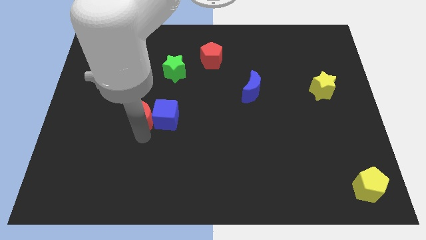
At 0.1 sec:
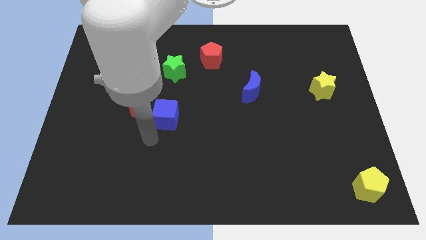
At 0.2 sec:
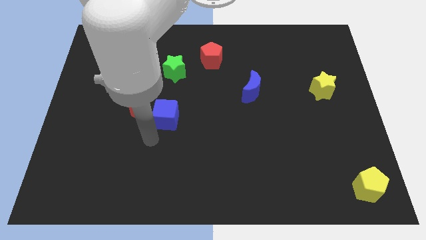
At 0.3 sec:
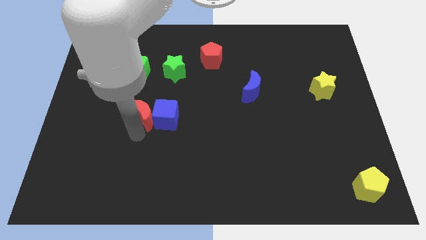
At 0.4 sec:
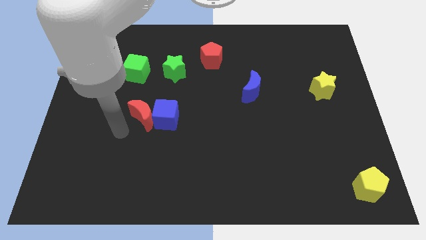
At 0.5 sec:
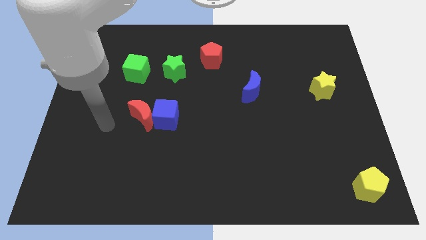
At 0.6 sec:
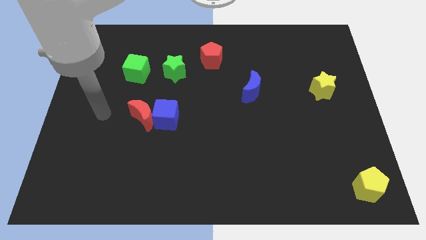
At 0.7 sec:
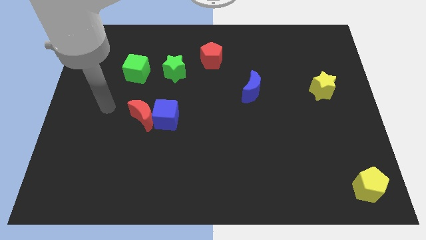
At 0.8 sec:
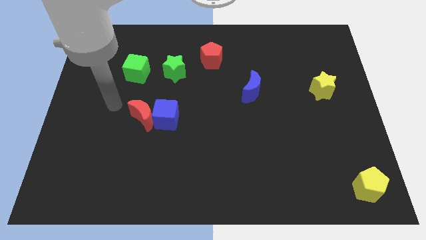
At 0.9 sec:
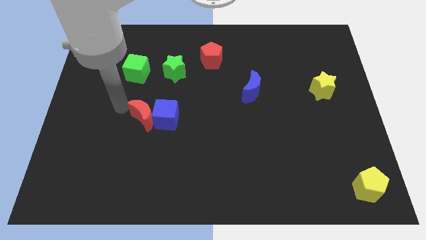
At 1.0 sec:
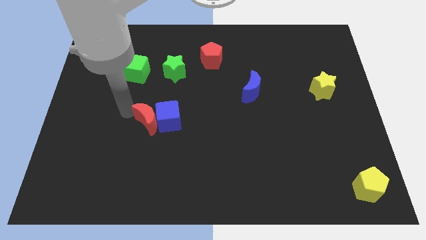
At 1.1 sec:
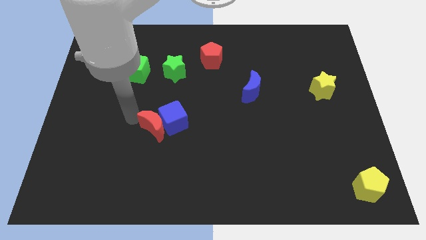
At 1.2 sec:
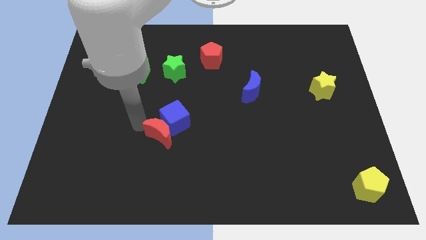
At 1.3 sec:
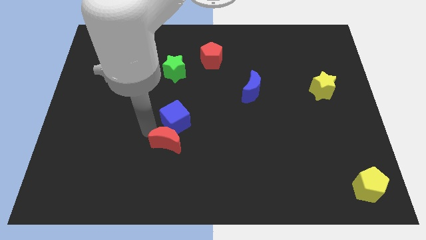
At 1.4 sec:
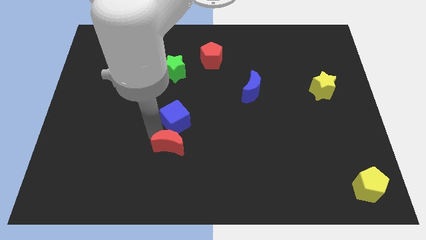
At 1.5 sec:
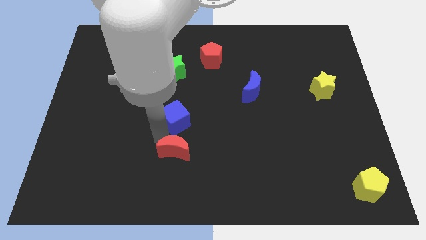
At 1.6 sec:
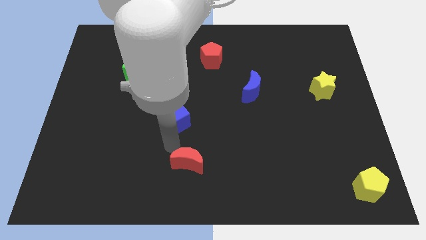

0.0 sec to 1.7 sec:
push the red moon to the bottom side of the blue cube

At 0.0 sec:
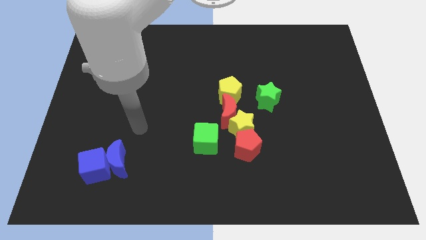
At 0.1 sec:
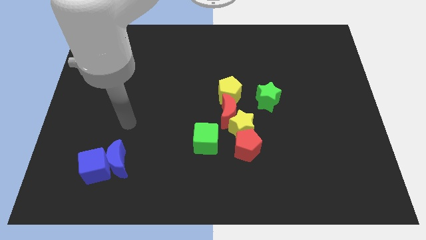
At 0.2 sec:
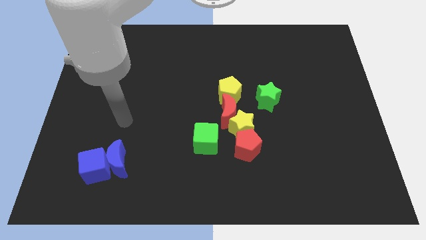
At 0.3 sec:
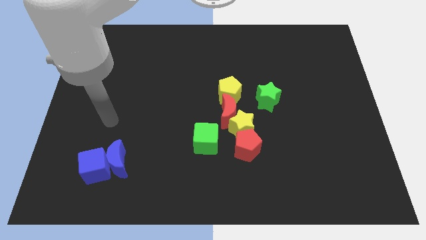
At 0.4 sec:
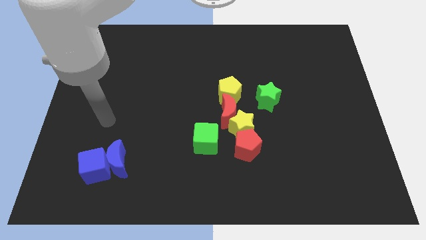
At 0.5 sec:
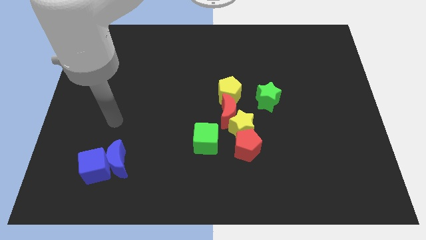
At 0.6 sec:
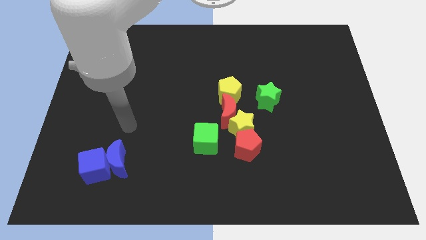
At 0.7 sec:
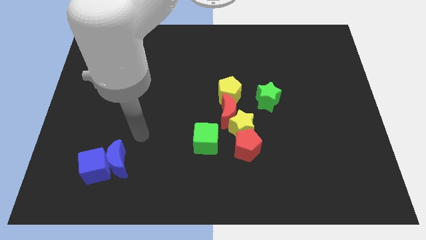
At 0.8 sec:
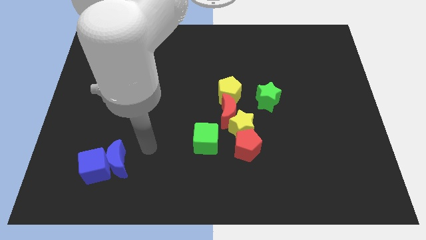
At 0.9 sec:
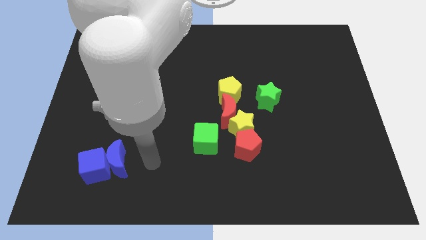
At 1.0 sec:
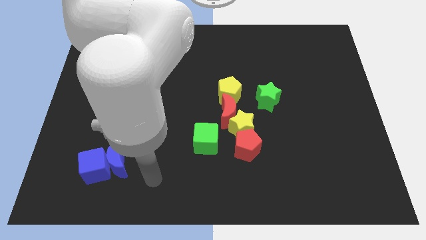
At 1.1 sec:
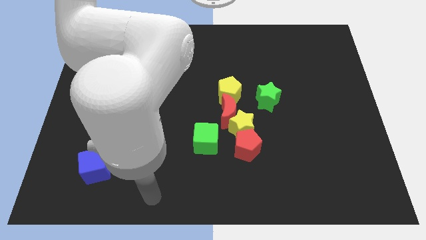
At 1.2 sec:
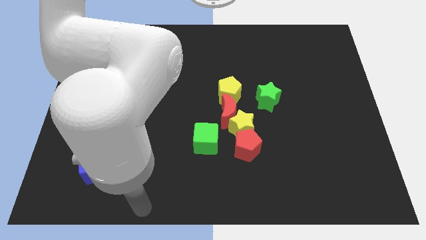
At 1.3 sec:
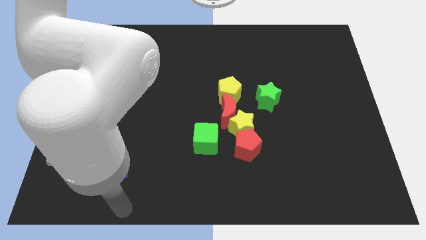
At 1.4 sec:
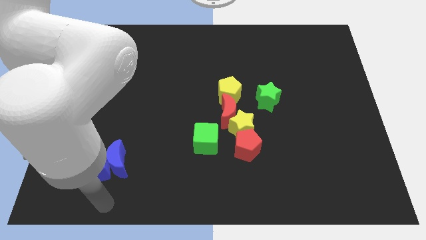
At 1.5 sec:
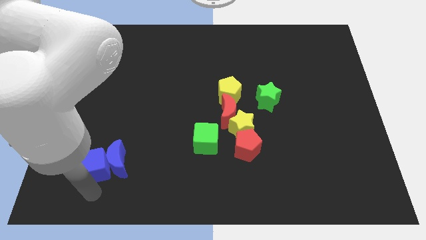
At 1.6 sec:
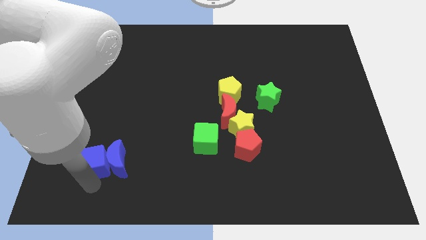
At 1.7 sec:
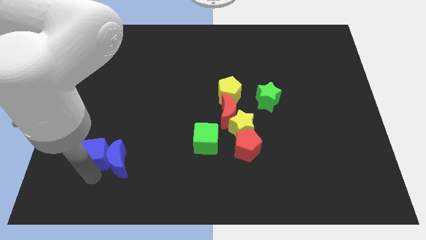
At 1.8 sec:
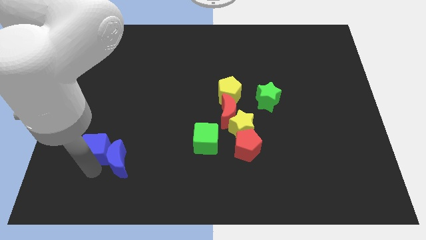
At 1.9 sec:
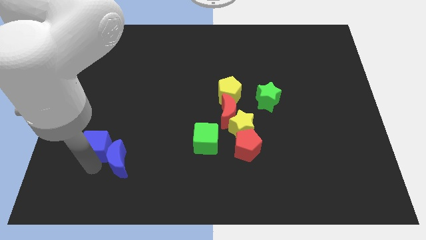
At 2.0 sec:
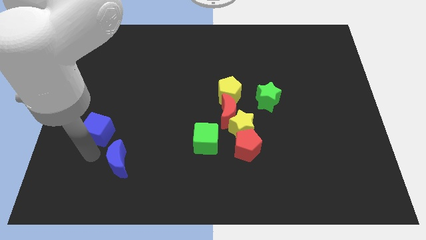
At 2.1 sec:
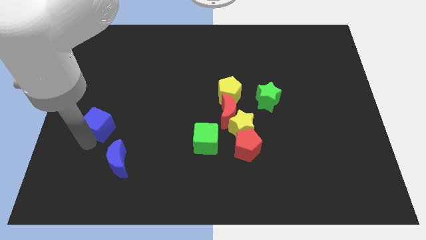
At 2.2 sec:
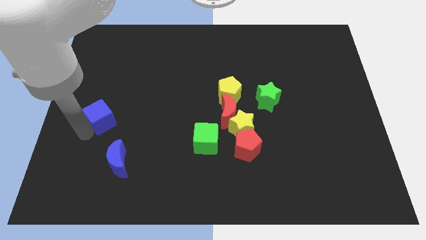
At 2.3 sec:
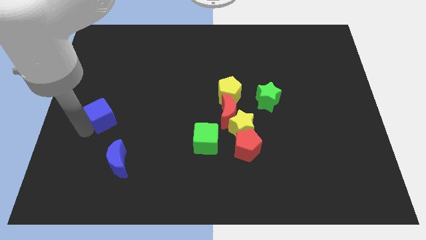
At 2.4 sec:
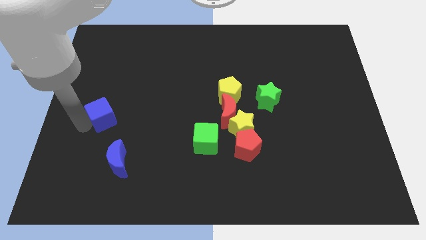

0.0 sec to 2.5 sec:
separate the blue cube away from the blue crescent

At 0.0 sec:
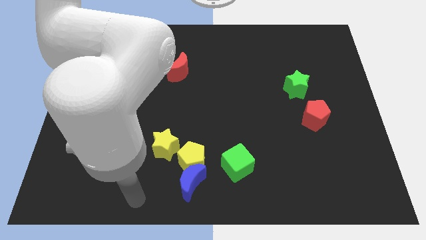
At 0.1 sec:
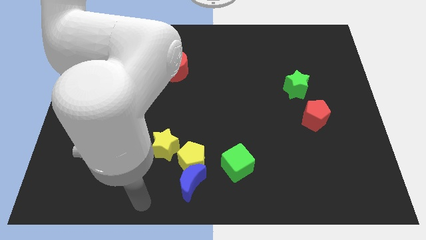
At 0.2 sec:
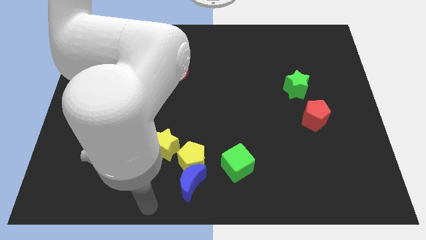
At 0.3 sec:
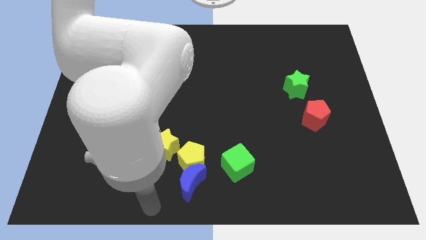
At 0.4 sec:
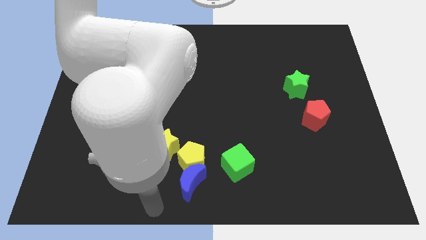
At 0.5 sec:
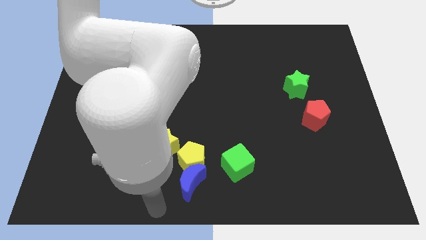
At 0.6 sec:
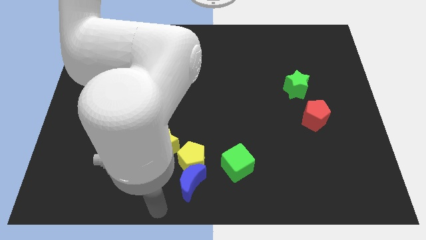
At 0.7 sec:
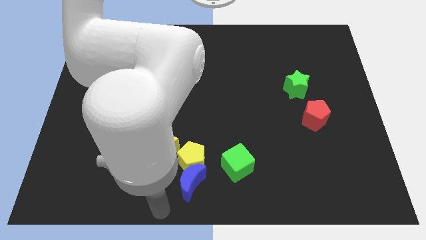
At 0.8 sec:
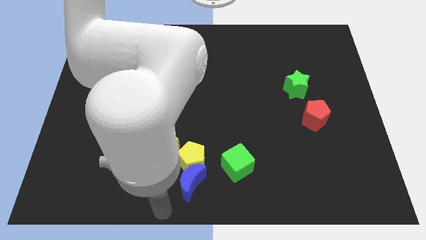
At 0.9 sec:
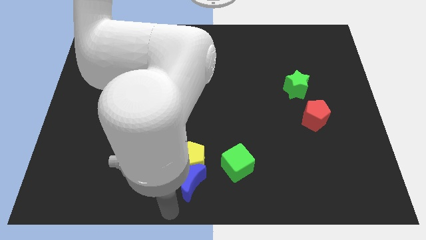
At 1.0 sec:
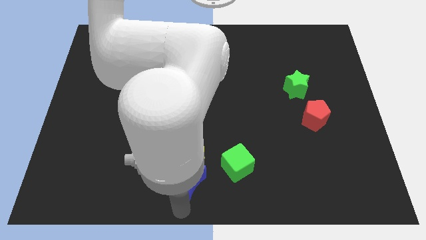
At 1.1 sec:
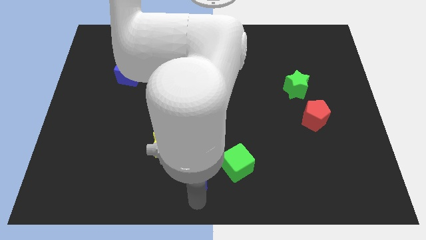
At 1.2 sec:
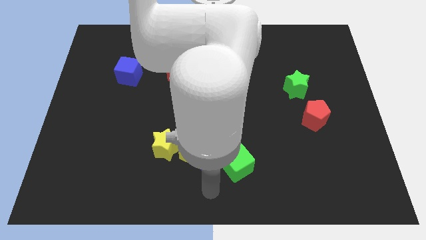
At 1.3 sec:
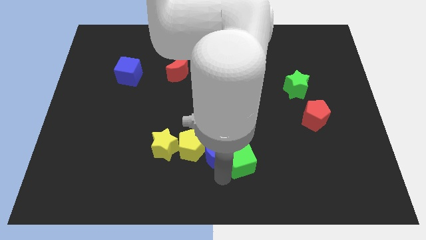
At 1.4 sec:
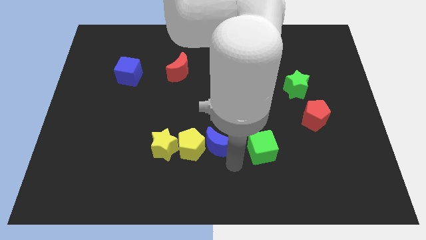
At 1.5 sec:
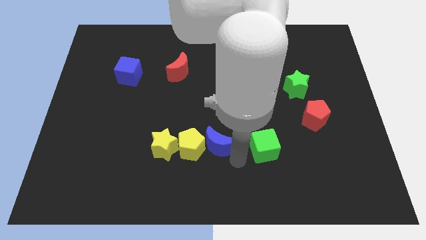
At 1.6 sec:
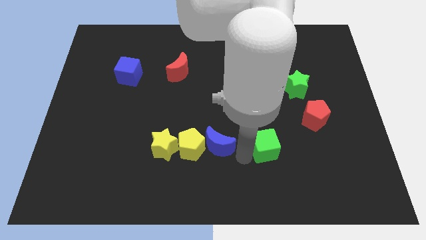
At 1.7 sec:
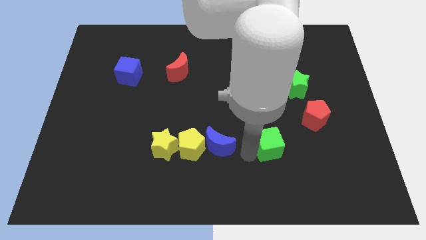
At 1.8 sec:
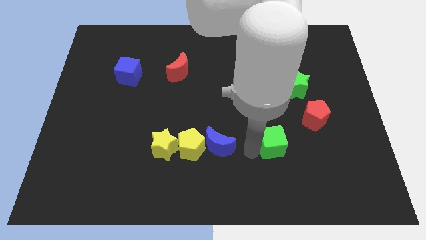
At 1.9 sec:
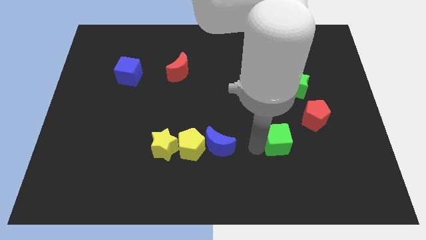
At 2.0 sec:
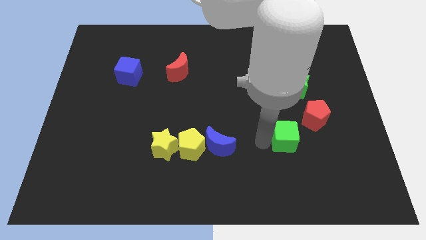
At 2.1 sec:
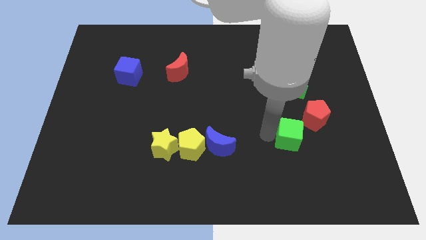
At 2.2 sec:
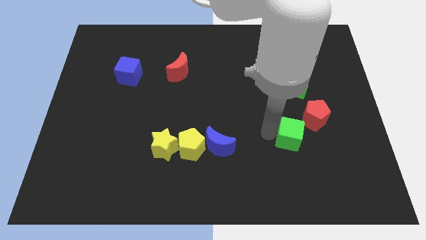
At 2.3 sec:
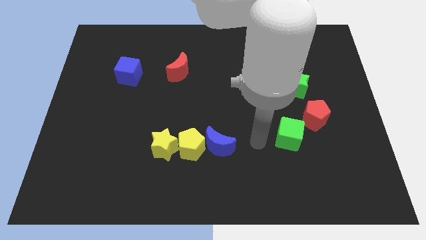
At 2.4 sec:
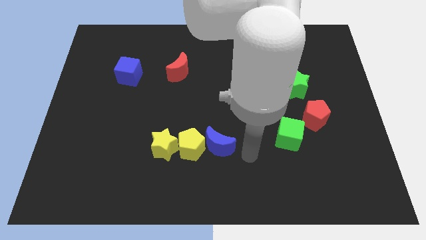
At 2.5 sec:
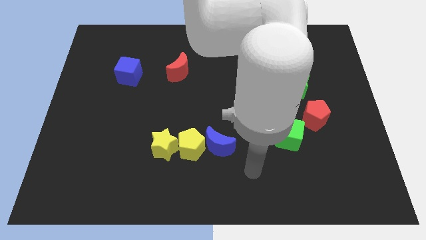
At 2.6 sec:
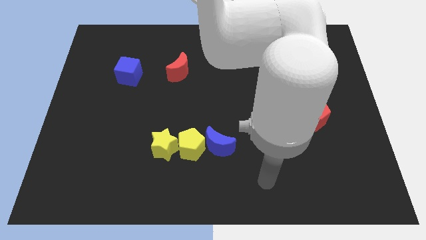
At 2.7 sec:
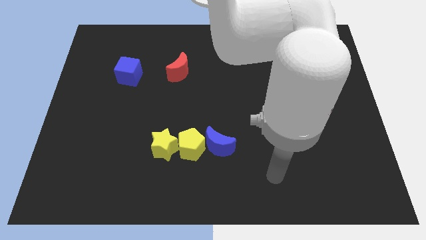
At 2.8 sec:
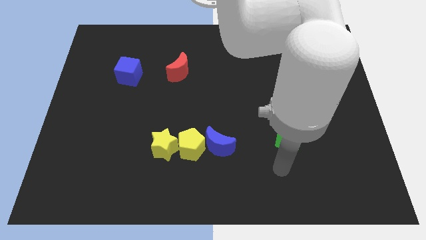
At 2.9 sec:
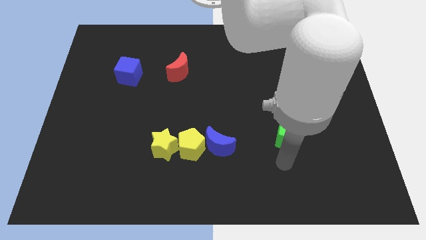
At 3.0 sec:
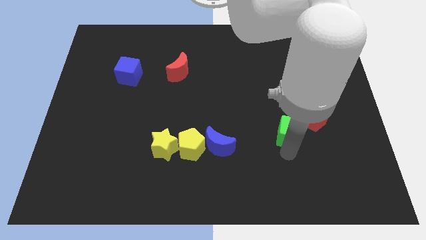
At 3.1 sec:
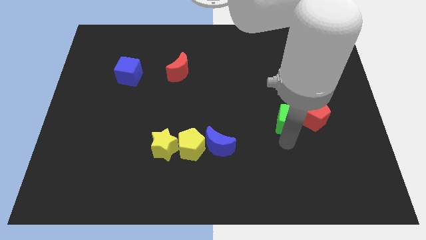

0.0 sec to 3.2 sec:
separate green cube from the group of blocks

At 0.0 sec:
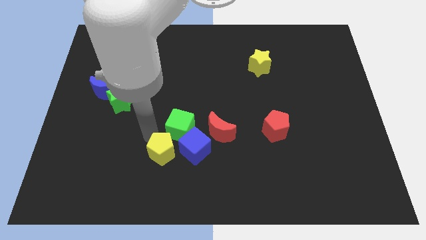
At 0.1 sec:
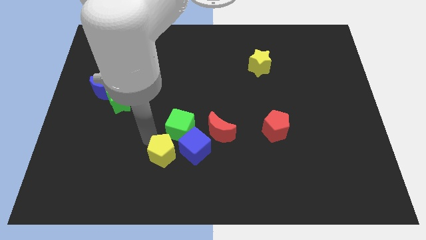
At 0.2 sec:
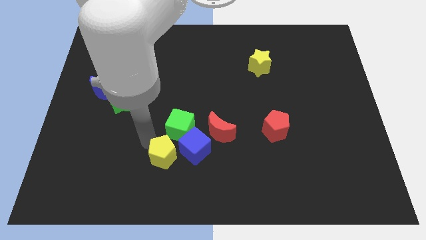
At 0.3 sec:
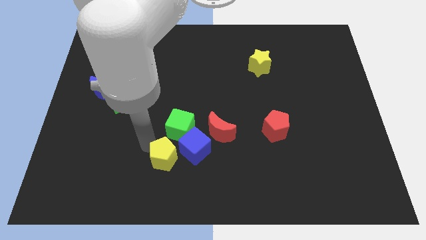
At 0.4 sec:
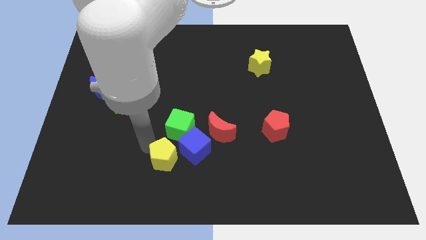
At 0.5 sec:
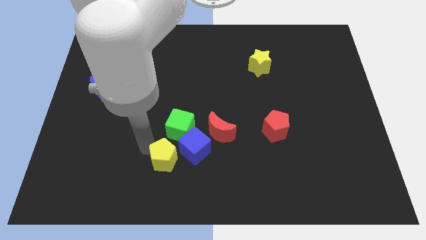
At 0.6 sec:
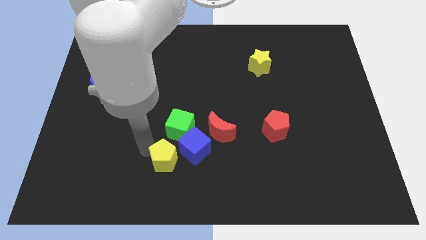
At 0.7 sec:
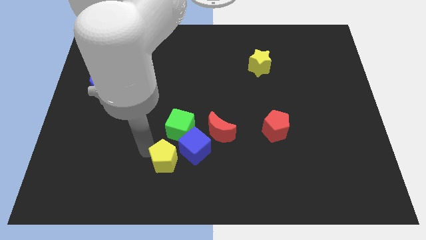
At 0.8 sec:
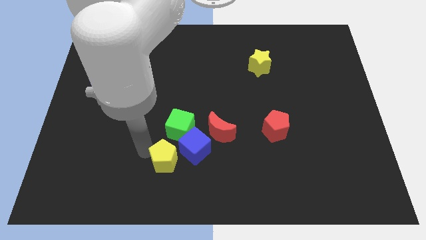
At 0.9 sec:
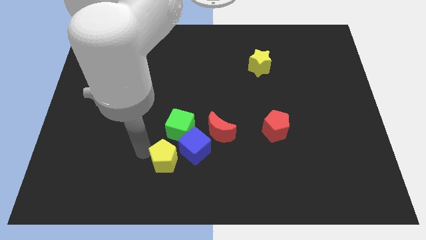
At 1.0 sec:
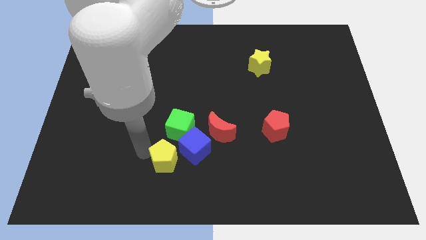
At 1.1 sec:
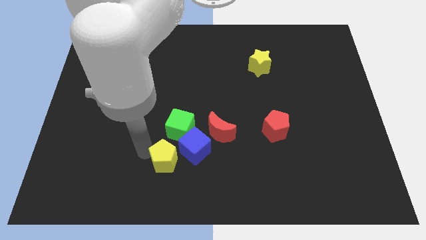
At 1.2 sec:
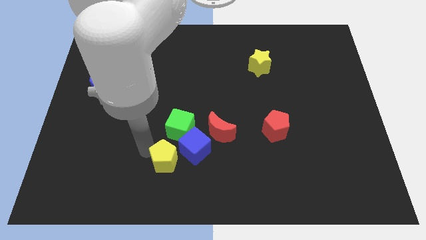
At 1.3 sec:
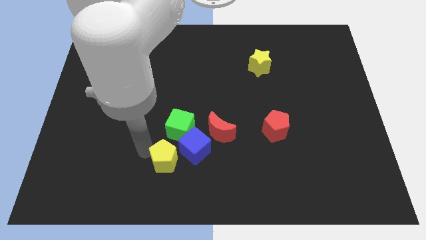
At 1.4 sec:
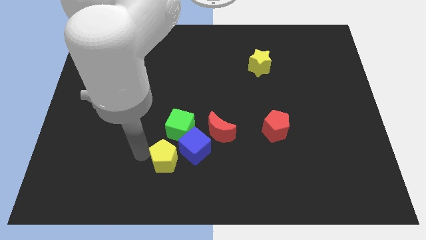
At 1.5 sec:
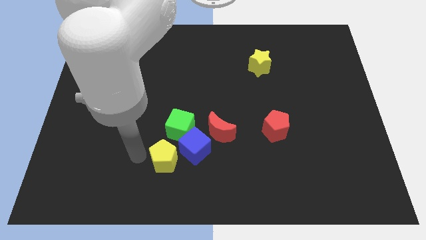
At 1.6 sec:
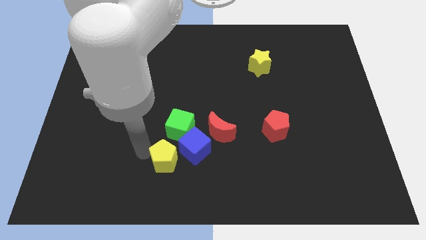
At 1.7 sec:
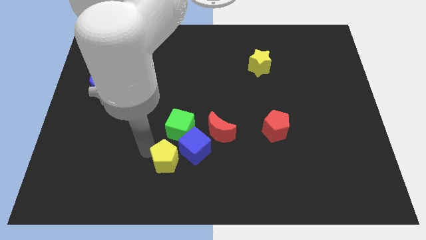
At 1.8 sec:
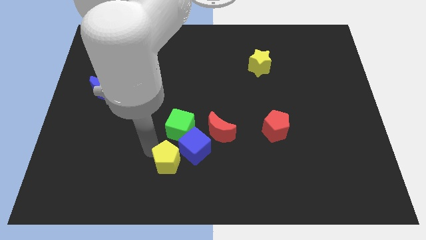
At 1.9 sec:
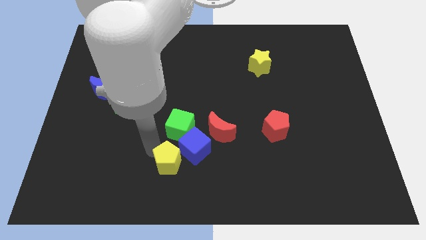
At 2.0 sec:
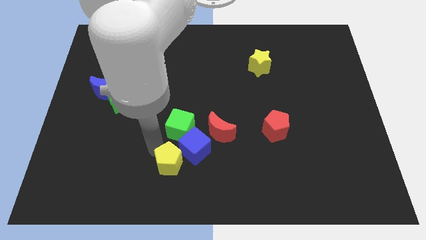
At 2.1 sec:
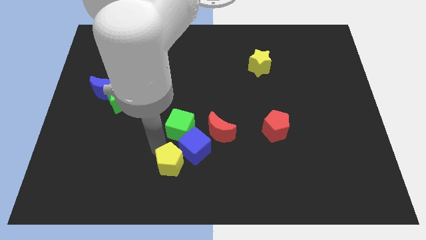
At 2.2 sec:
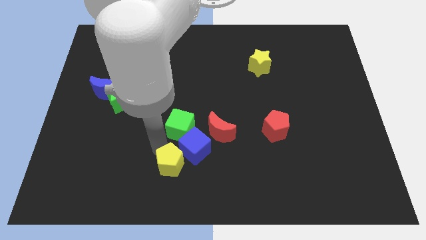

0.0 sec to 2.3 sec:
move the yellow pentagon to the bottom of the green cube
